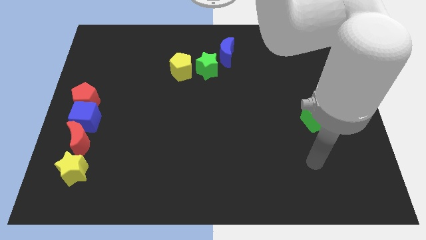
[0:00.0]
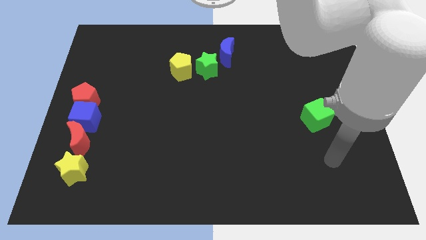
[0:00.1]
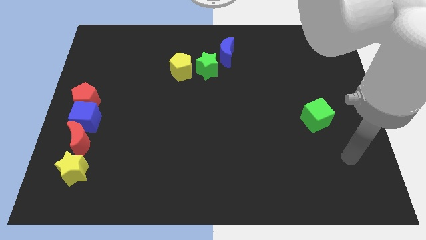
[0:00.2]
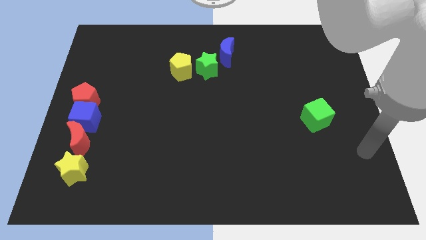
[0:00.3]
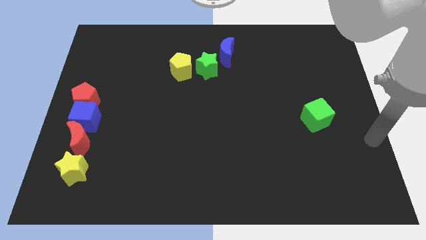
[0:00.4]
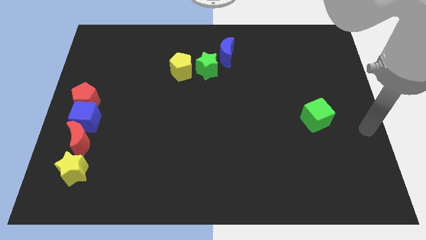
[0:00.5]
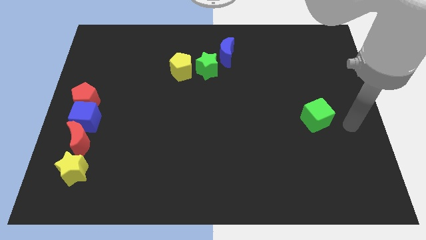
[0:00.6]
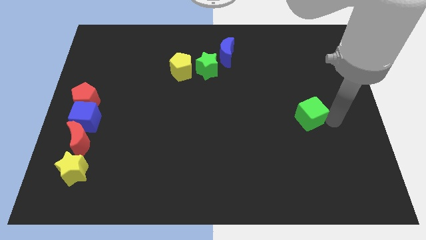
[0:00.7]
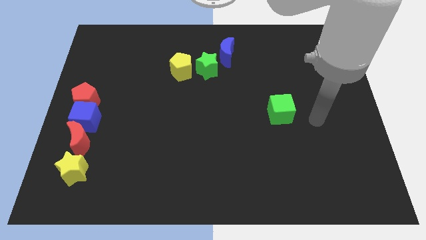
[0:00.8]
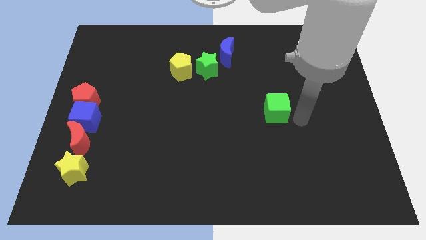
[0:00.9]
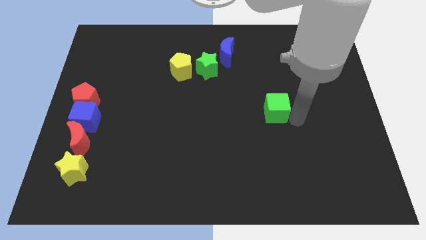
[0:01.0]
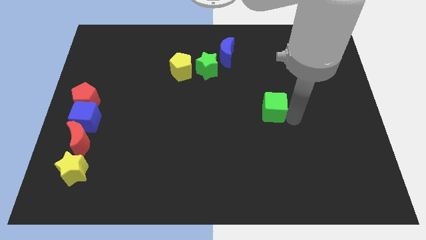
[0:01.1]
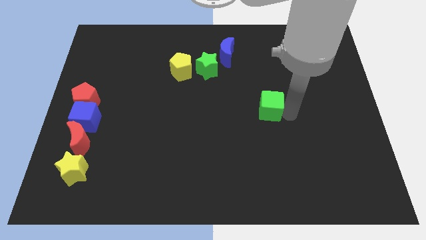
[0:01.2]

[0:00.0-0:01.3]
push the green cube towards the center

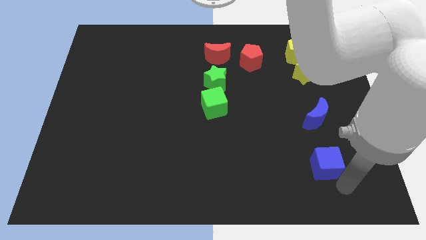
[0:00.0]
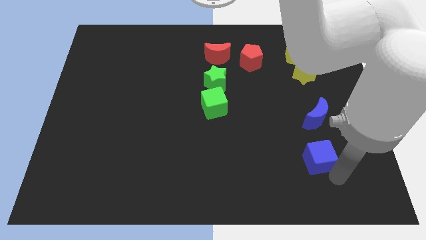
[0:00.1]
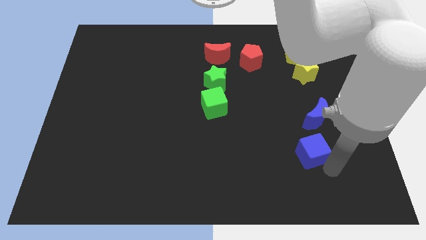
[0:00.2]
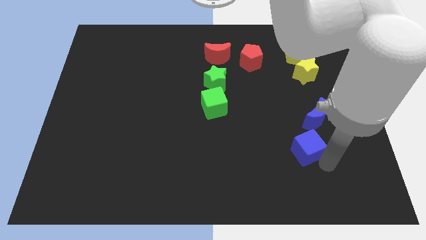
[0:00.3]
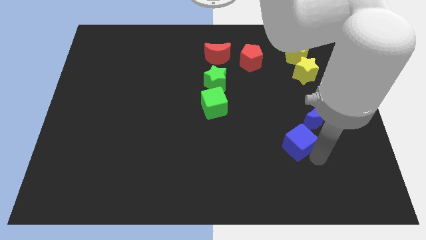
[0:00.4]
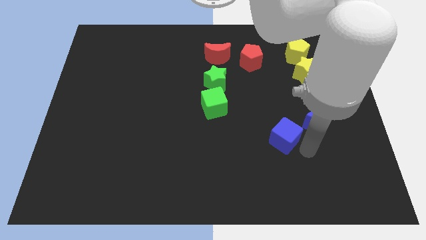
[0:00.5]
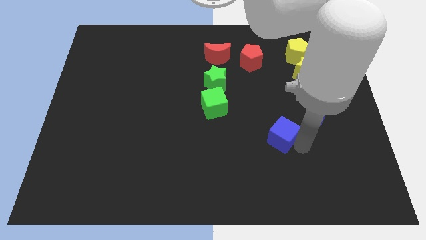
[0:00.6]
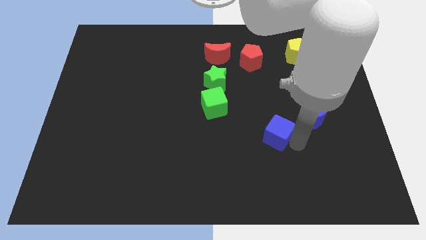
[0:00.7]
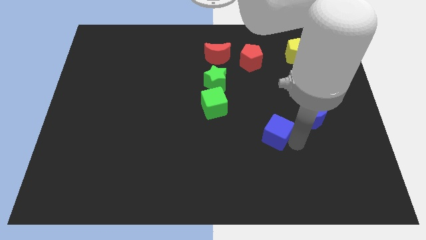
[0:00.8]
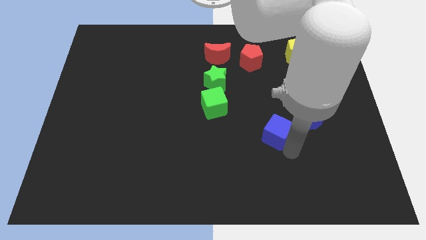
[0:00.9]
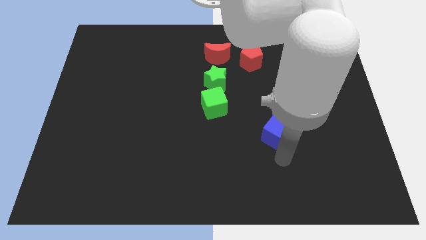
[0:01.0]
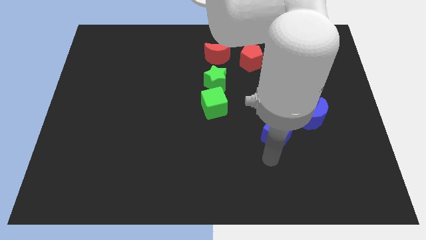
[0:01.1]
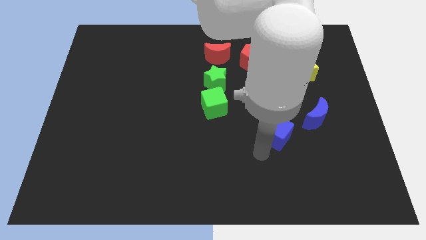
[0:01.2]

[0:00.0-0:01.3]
push the blue cube bottom left side of the blue crescent

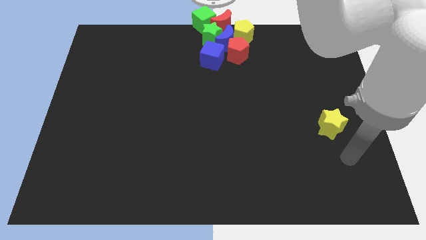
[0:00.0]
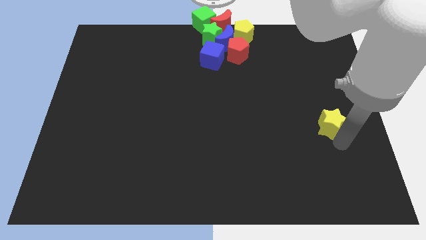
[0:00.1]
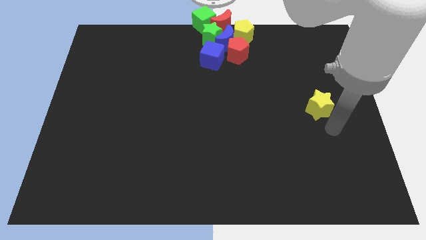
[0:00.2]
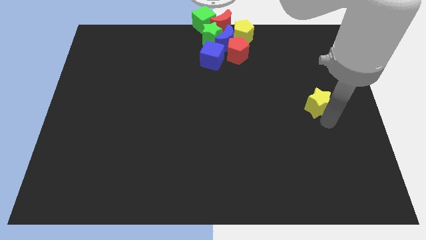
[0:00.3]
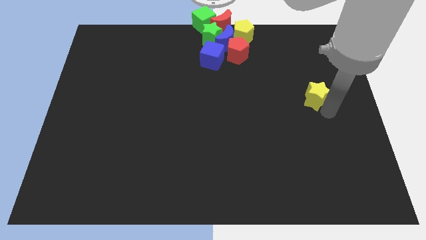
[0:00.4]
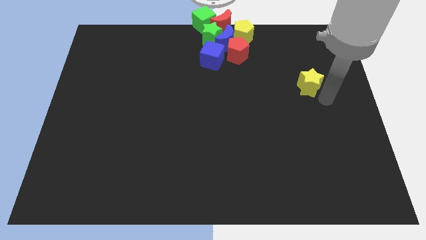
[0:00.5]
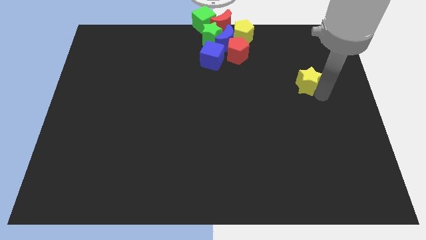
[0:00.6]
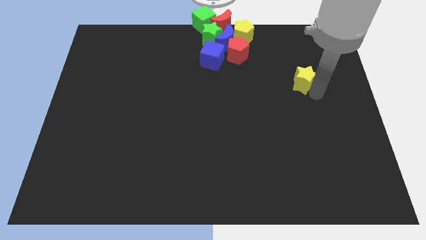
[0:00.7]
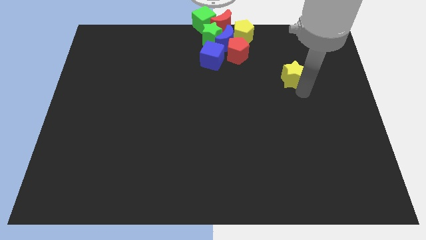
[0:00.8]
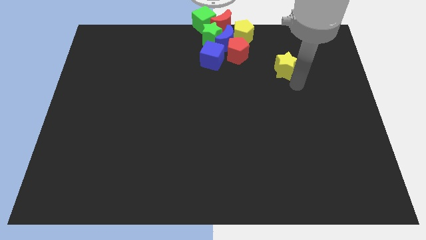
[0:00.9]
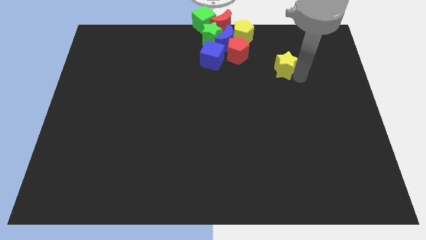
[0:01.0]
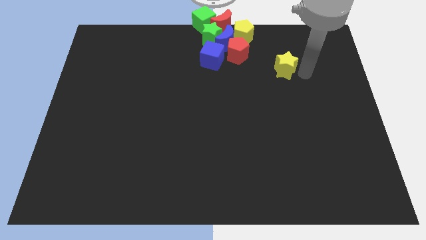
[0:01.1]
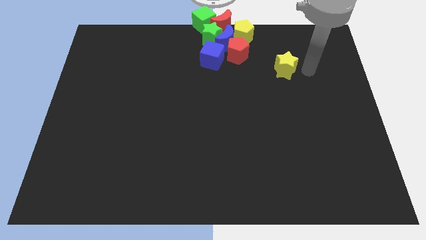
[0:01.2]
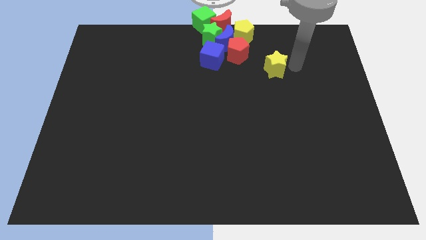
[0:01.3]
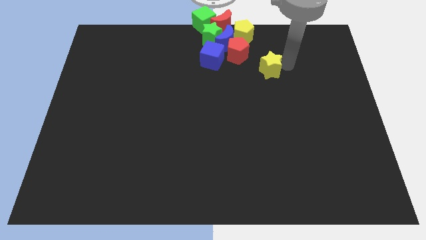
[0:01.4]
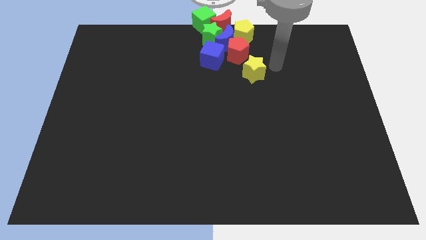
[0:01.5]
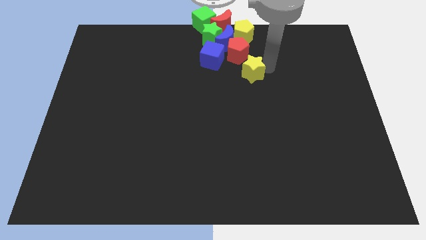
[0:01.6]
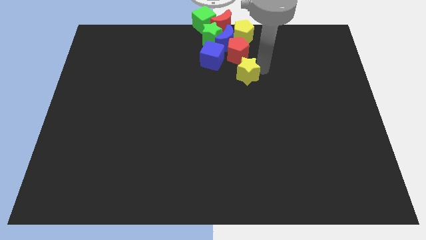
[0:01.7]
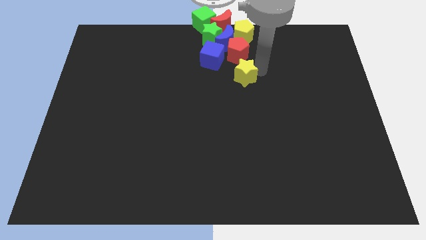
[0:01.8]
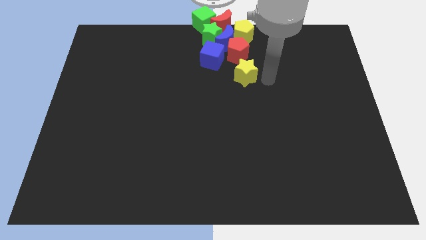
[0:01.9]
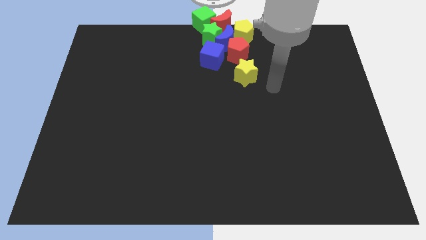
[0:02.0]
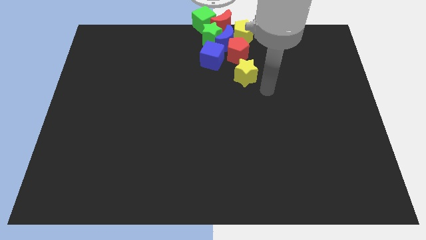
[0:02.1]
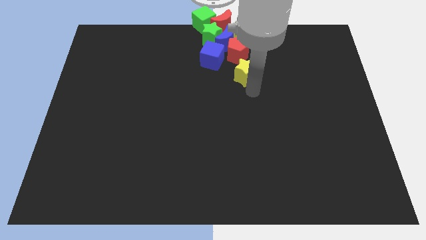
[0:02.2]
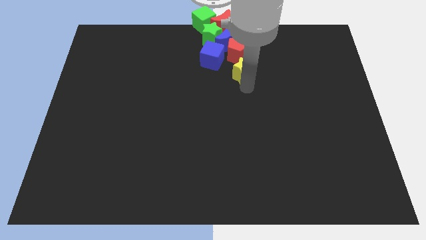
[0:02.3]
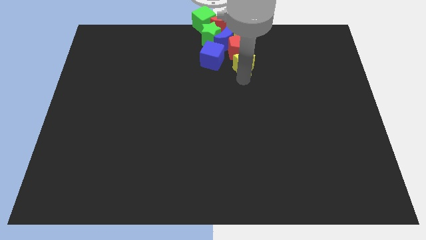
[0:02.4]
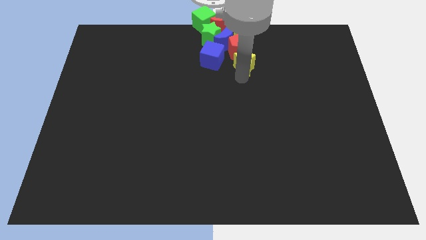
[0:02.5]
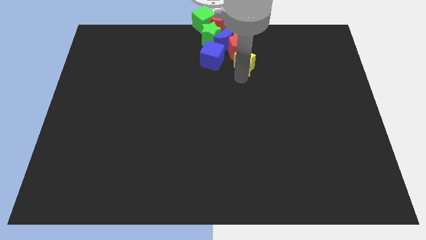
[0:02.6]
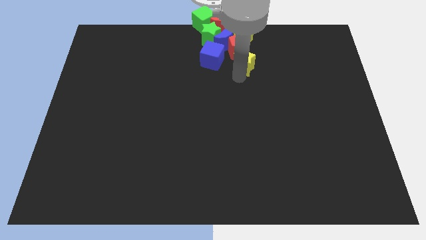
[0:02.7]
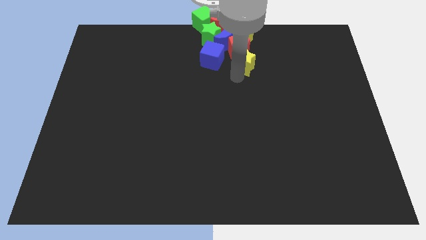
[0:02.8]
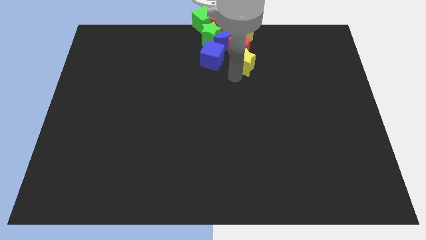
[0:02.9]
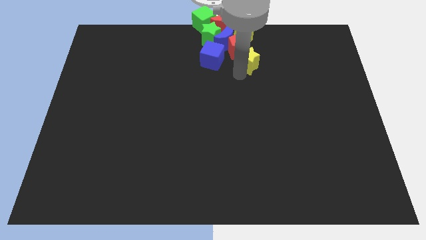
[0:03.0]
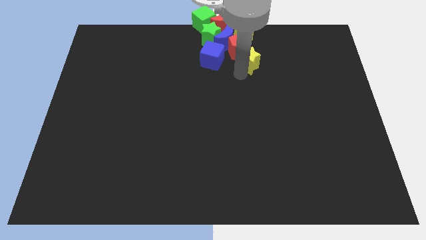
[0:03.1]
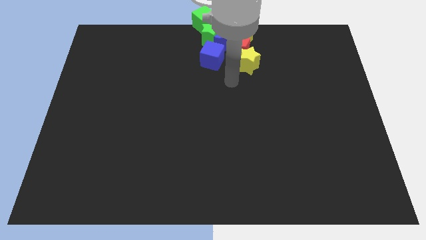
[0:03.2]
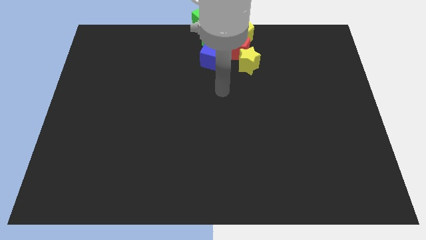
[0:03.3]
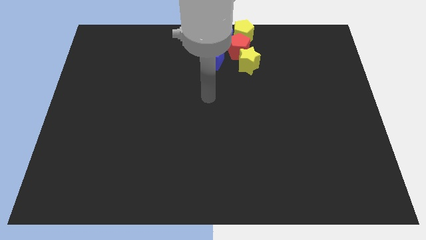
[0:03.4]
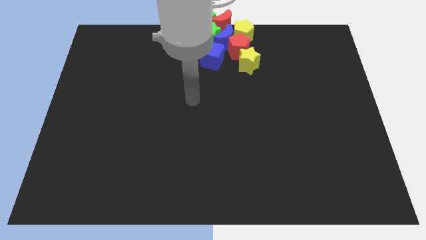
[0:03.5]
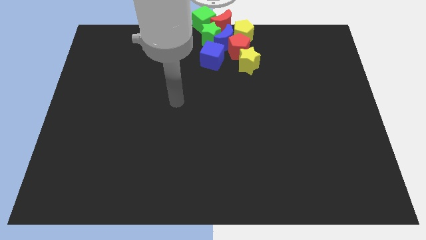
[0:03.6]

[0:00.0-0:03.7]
push the yellow star into the red pentagon

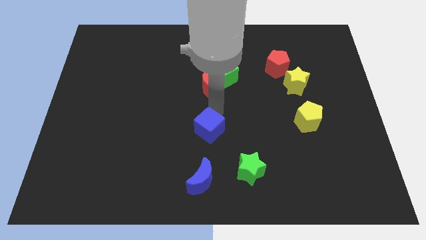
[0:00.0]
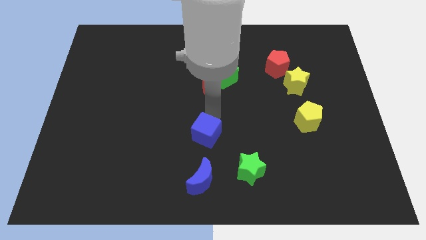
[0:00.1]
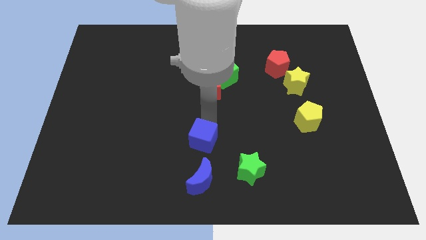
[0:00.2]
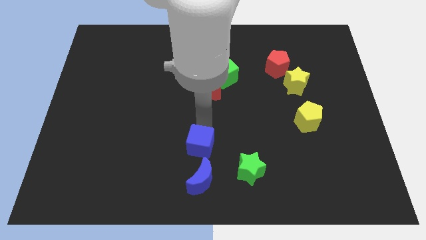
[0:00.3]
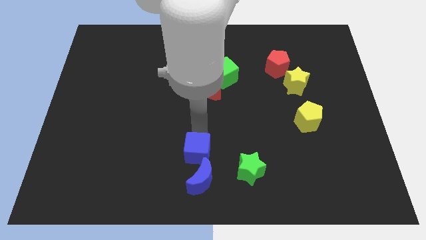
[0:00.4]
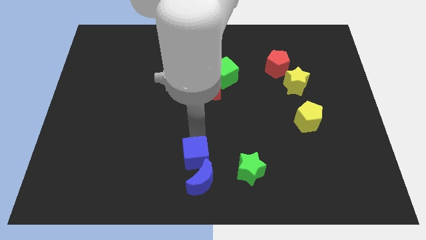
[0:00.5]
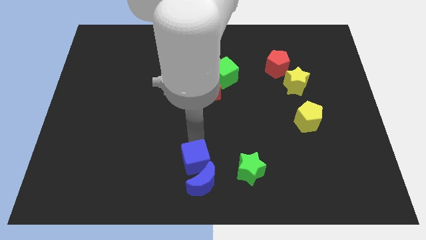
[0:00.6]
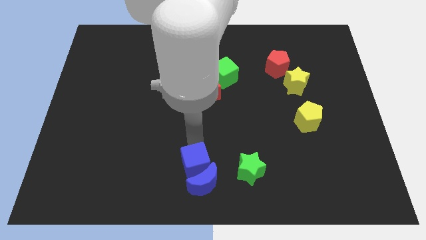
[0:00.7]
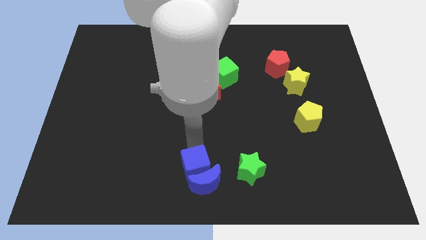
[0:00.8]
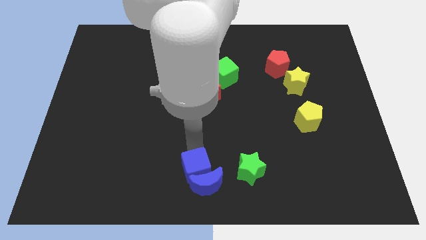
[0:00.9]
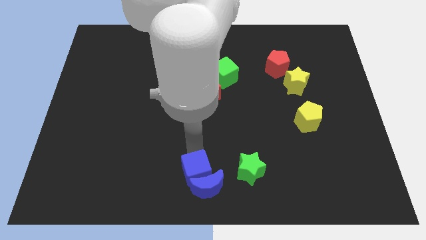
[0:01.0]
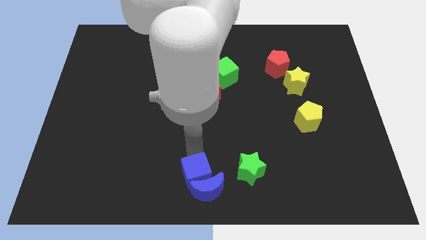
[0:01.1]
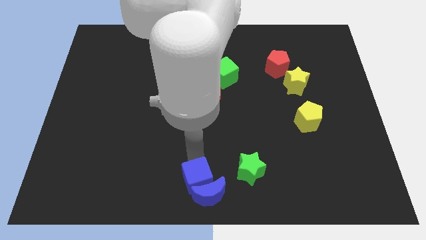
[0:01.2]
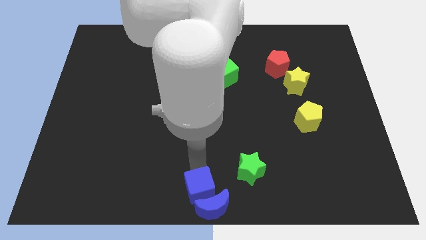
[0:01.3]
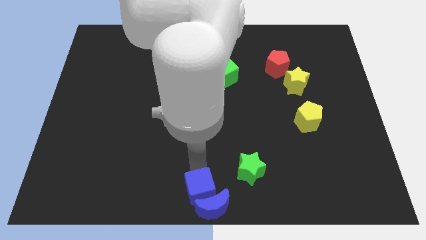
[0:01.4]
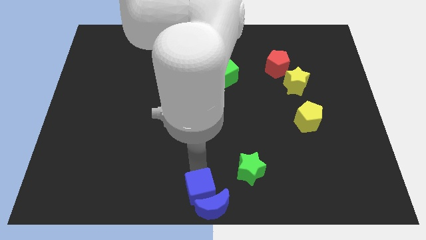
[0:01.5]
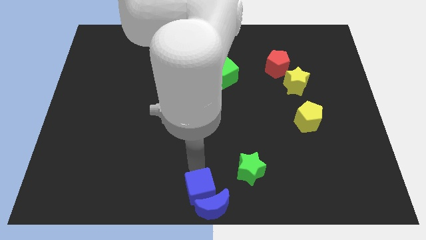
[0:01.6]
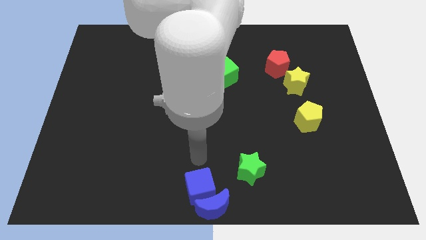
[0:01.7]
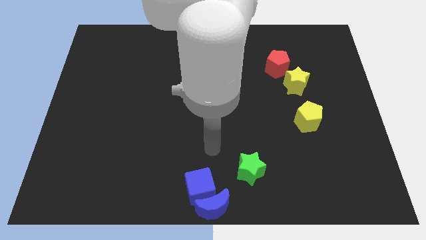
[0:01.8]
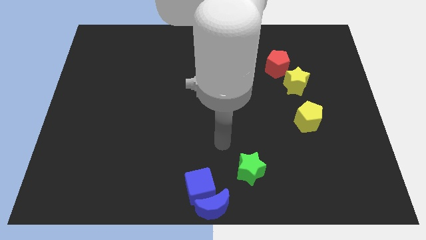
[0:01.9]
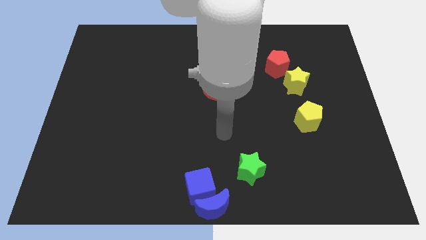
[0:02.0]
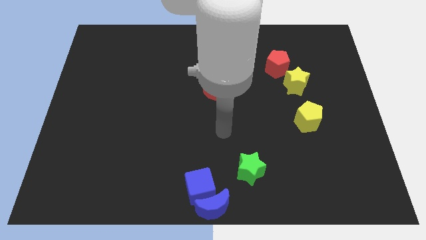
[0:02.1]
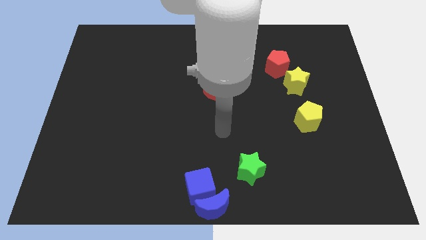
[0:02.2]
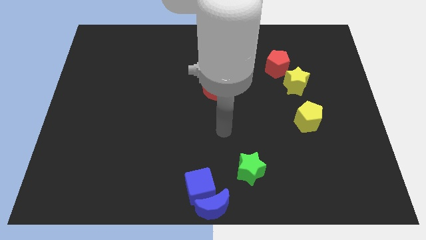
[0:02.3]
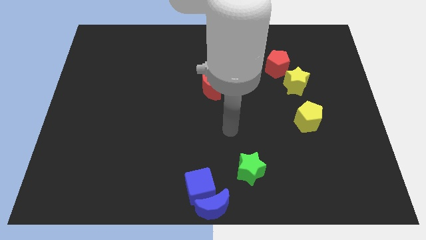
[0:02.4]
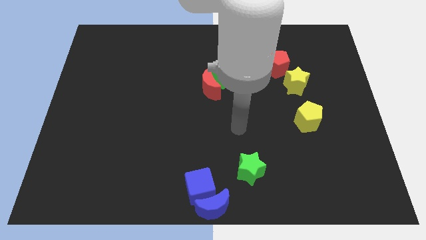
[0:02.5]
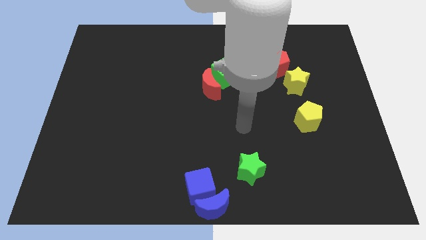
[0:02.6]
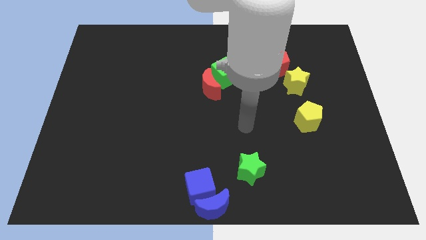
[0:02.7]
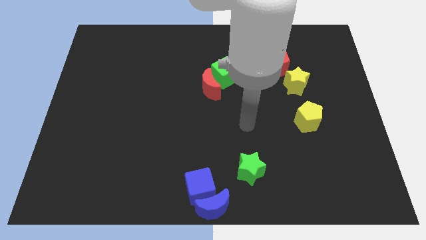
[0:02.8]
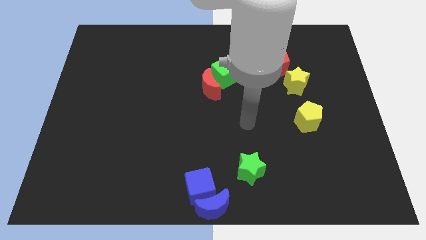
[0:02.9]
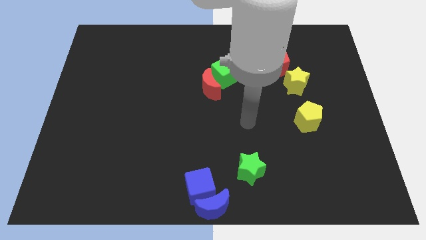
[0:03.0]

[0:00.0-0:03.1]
put the blue cube into the blue moon
